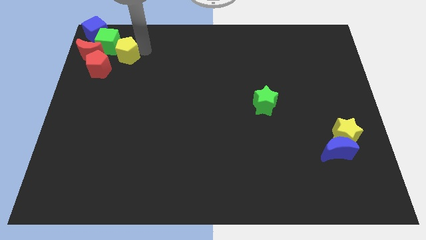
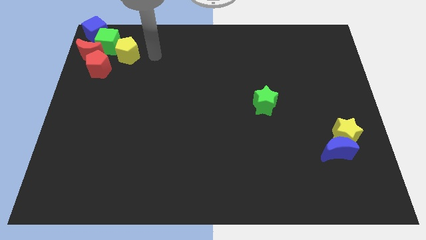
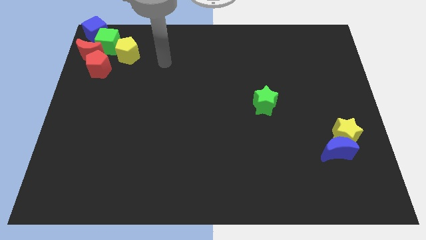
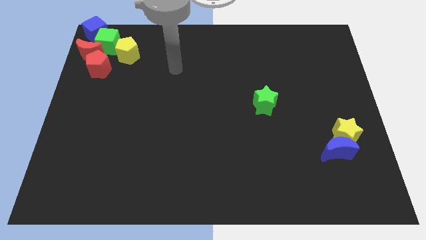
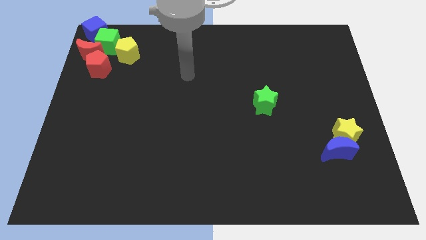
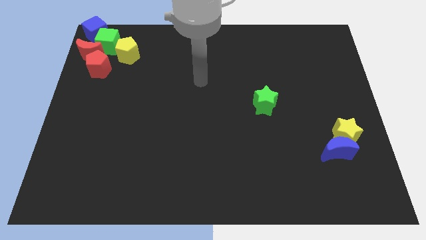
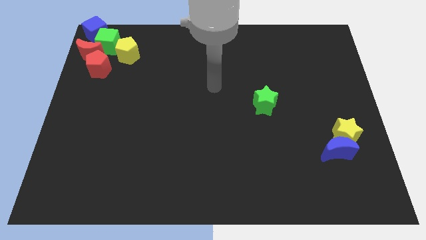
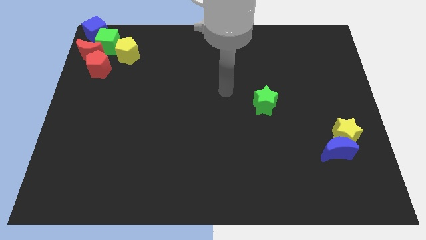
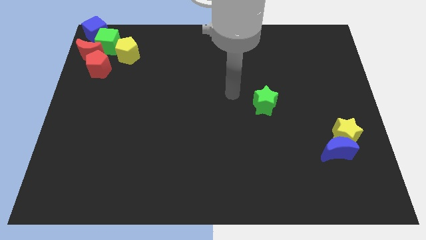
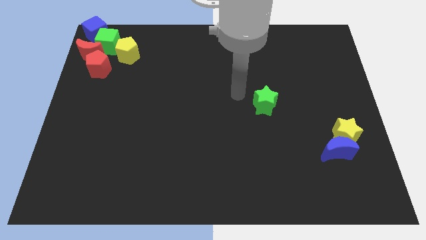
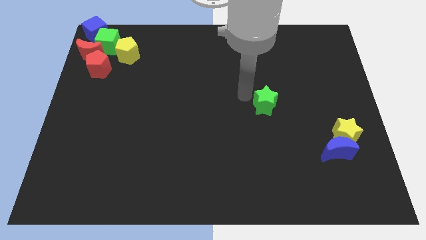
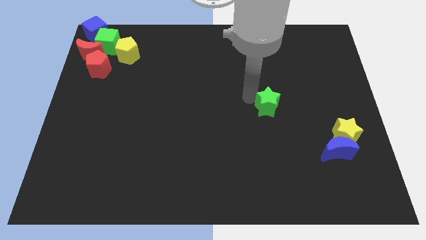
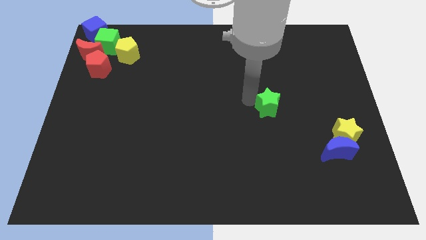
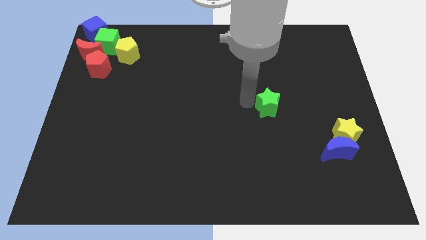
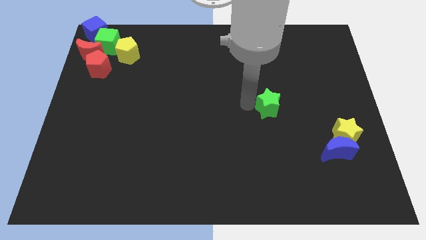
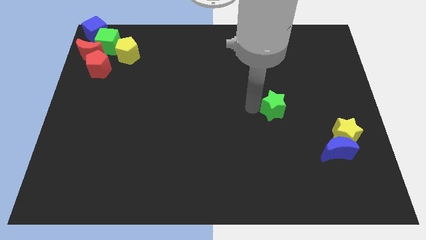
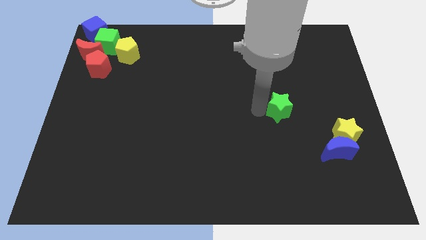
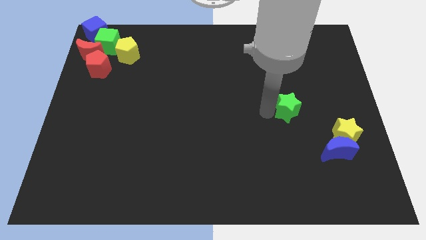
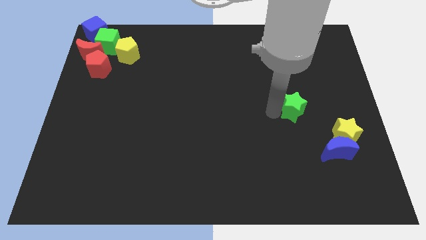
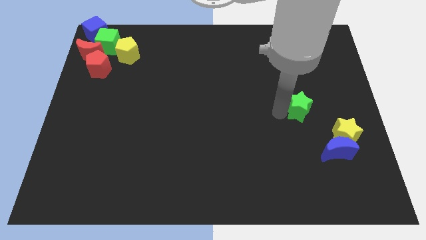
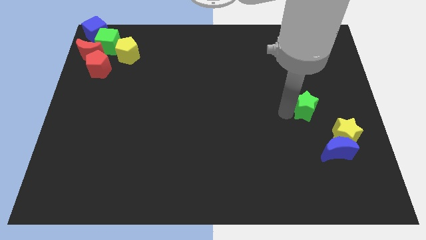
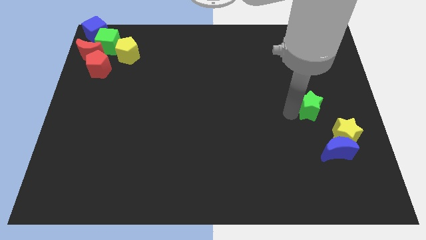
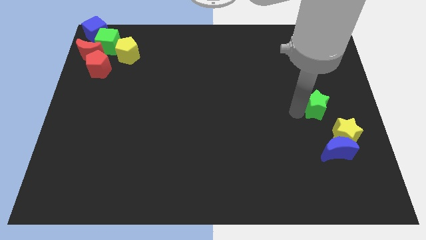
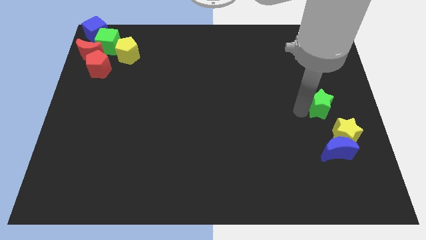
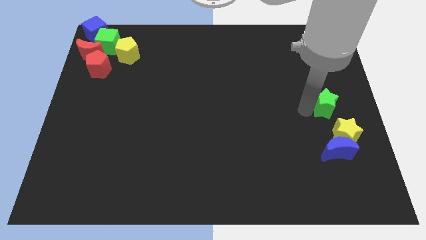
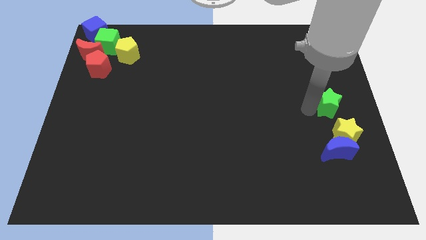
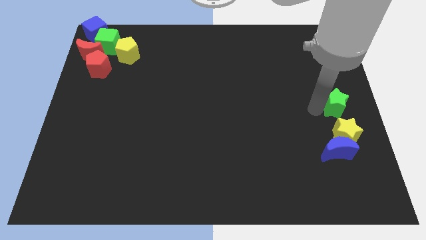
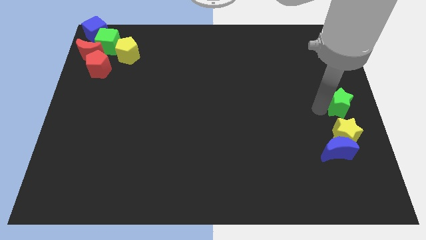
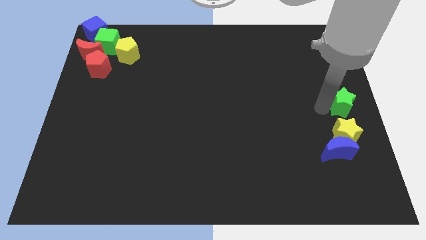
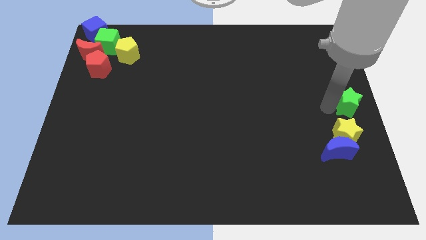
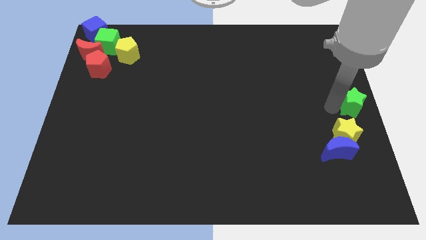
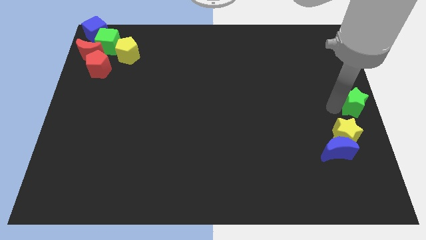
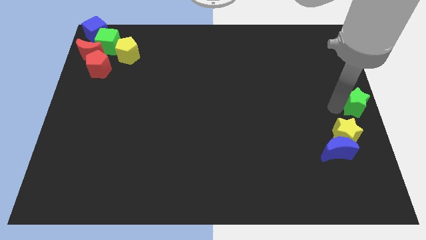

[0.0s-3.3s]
push the green star to the top side of the yellow star

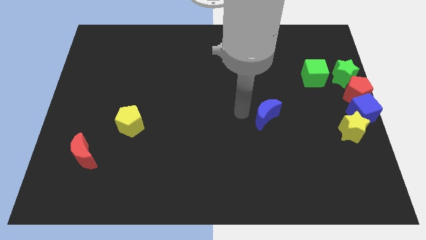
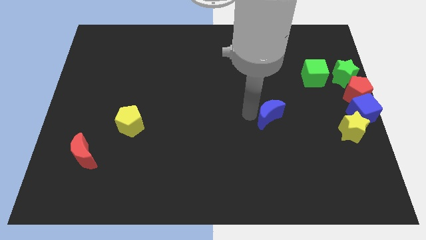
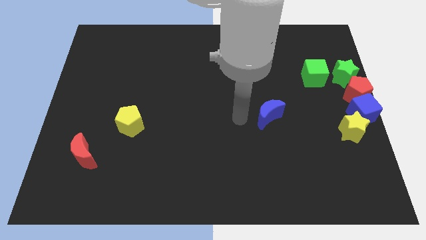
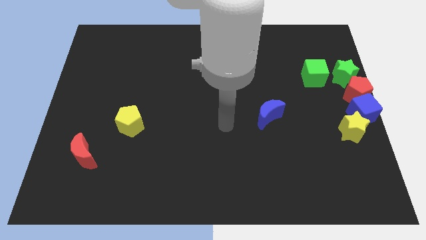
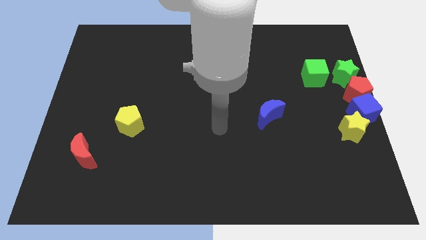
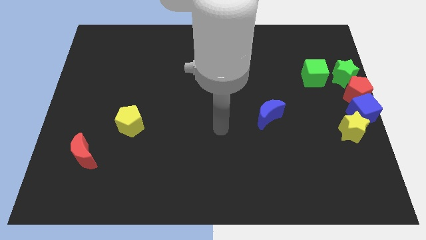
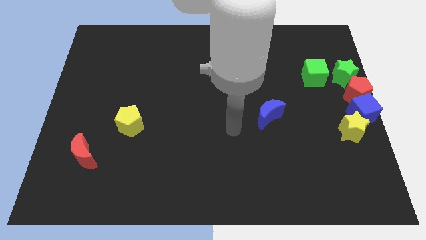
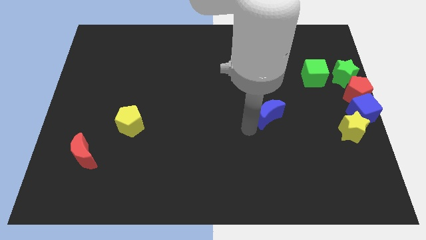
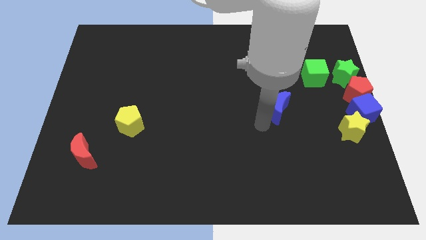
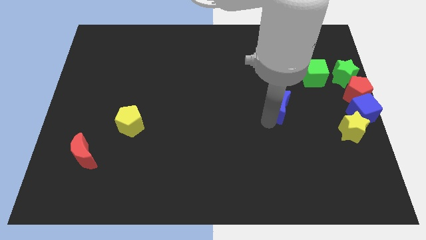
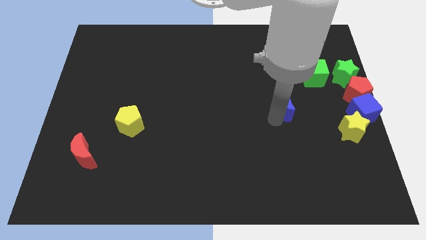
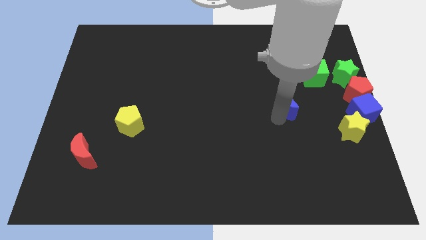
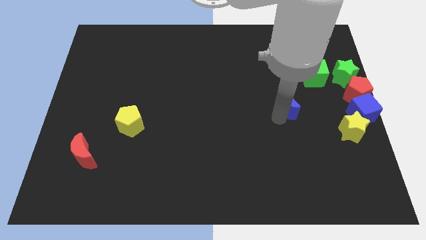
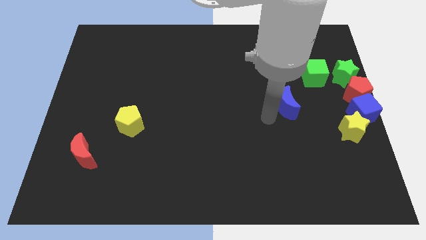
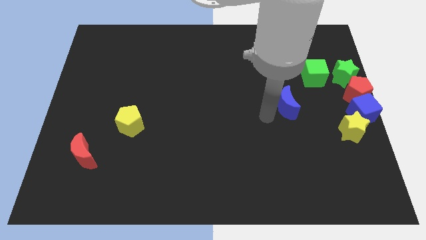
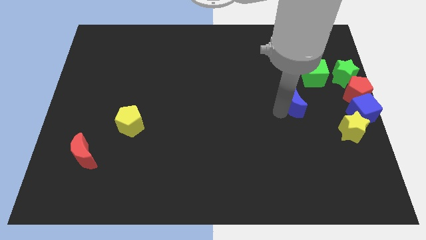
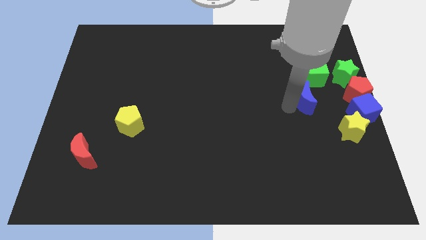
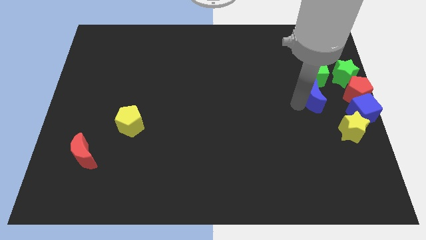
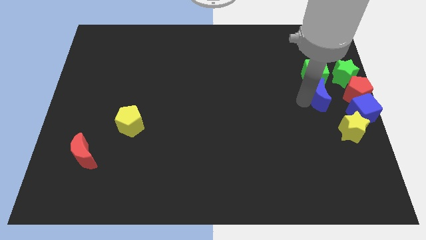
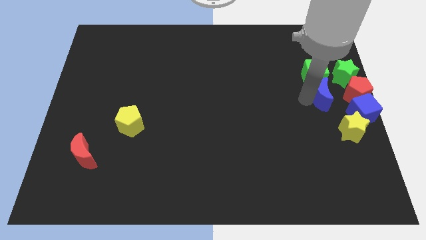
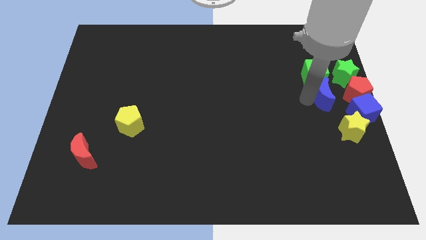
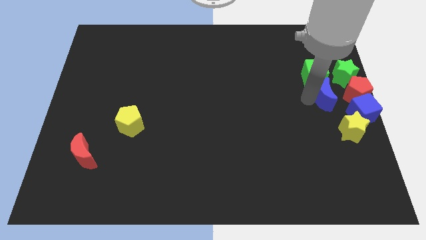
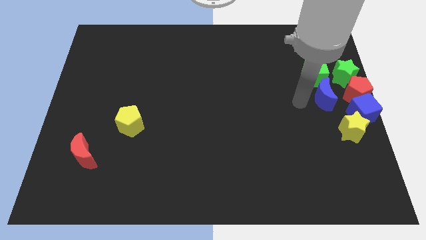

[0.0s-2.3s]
move the blue crescent at the bottom of the green cube

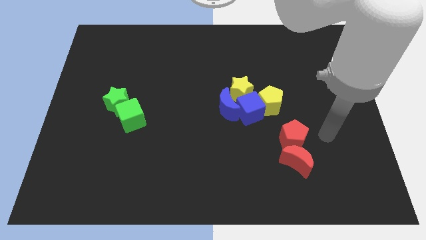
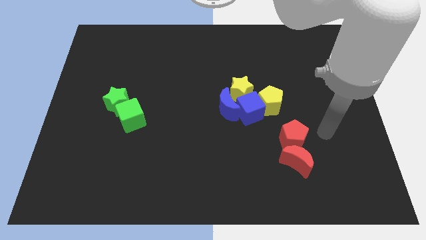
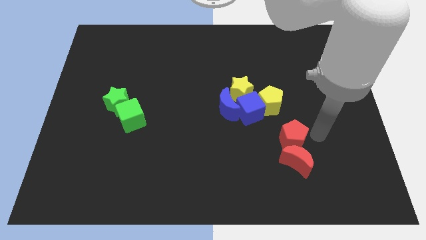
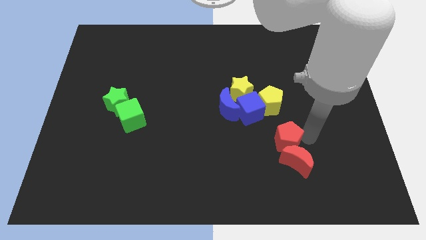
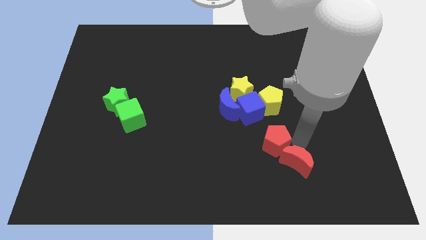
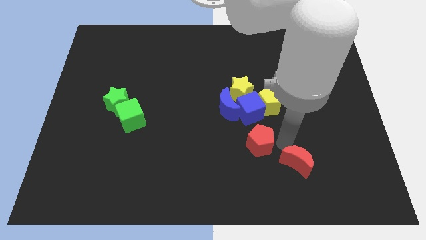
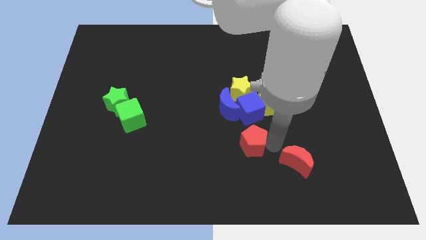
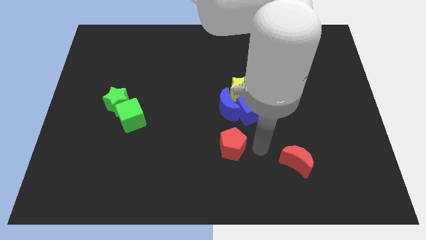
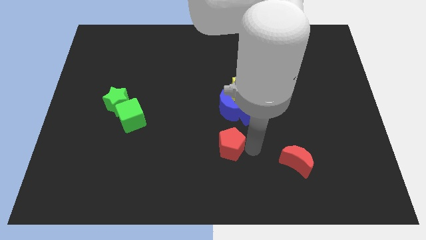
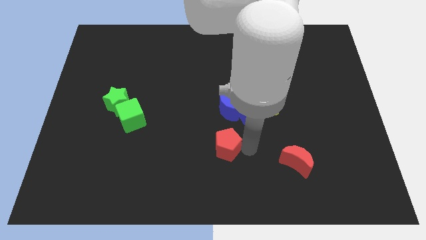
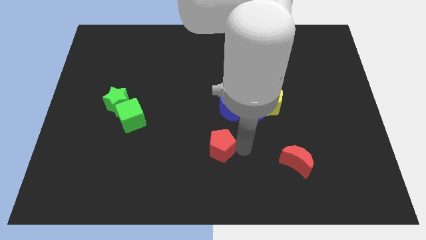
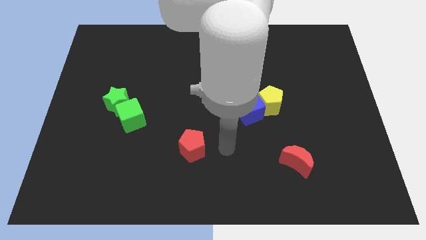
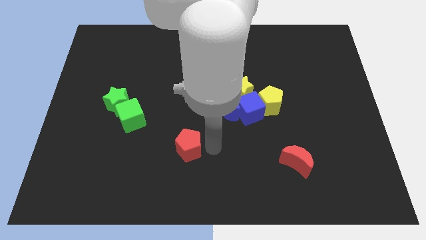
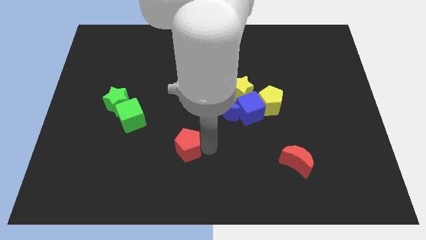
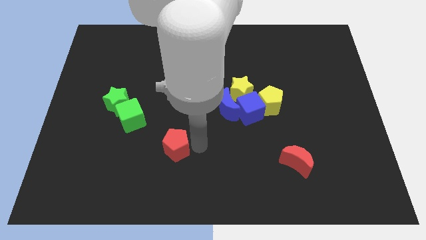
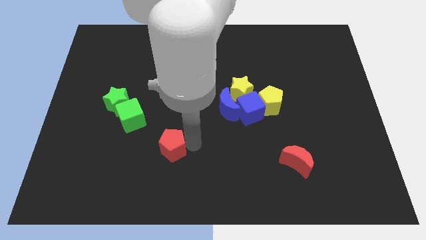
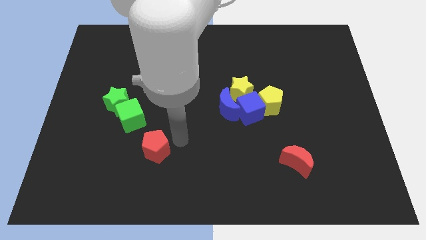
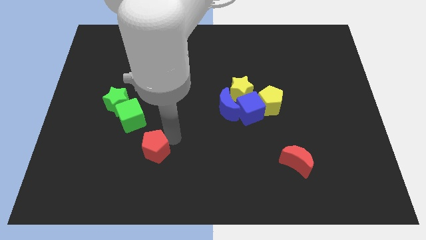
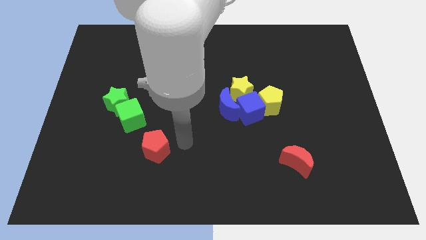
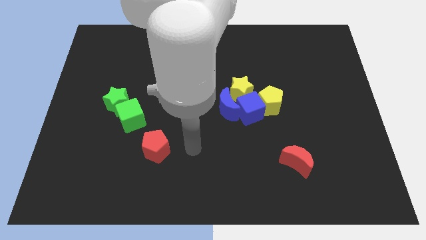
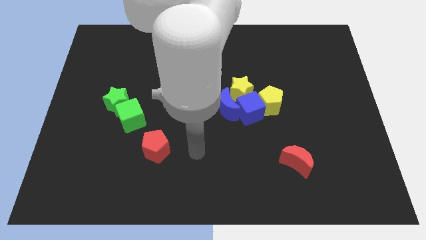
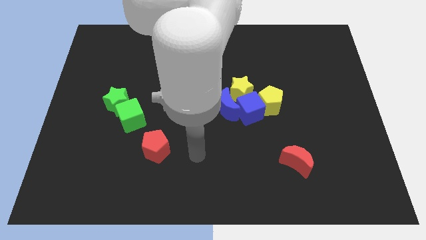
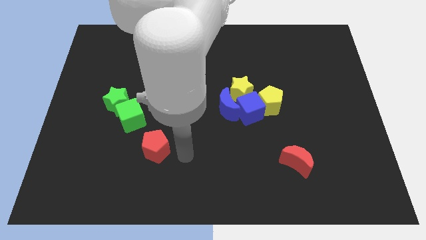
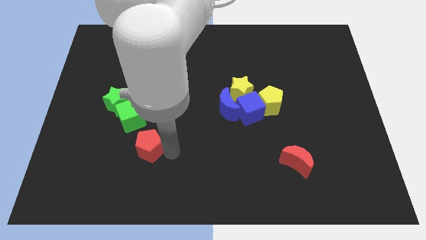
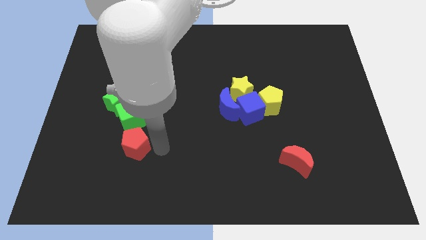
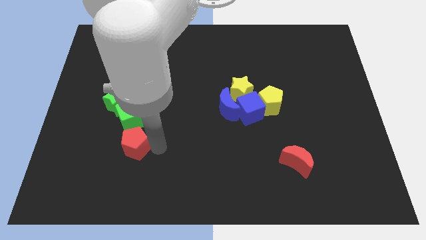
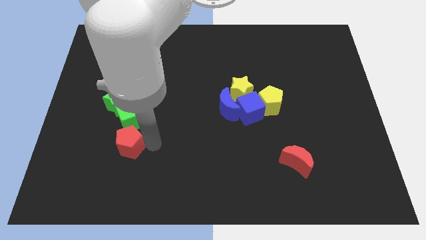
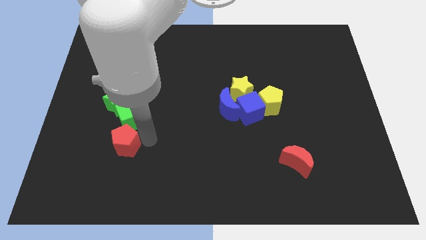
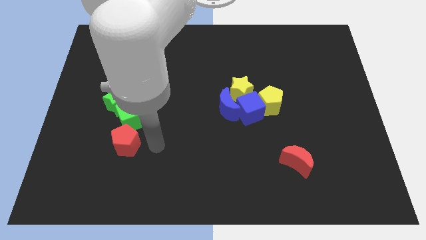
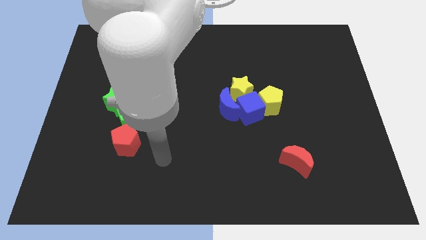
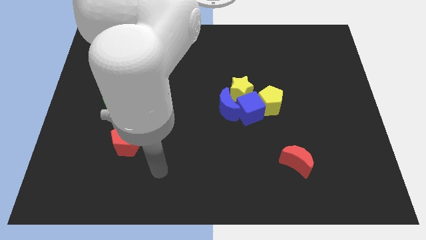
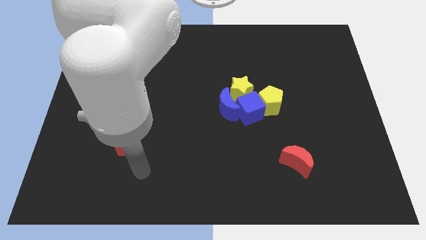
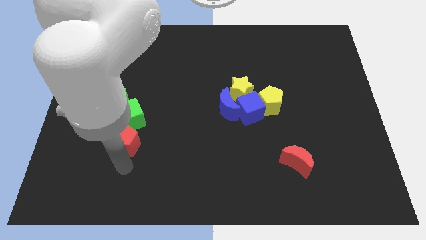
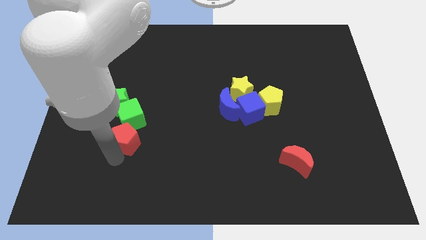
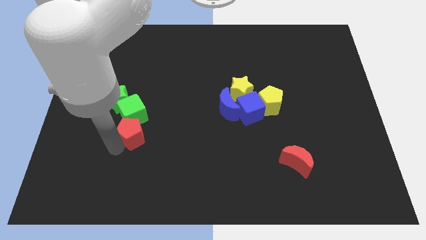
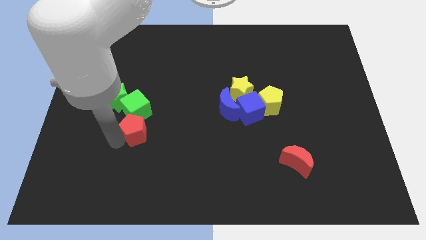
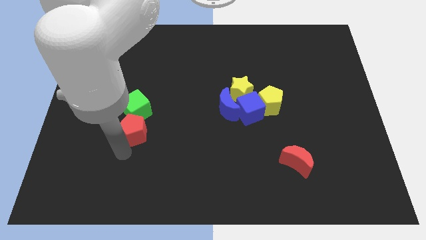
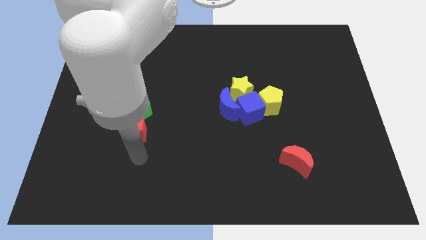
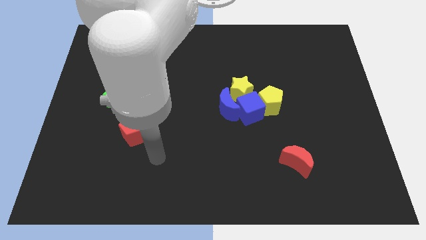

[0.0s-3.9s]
move the red pentagon to the bottom of the green cube
